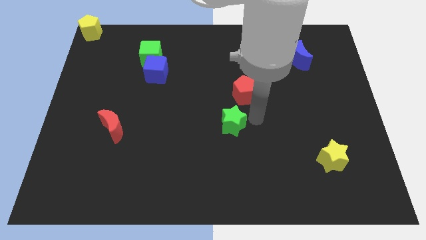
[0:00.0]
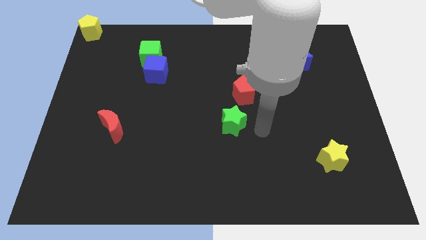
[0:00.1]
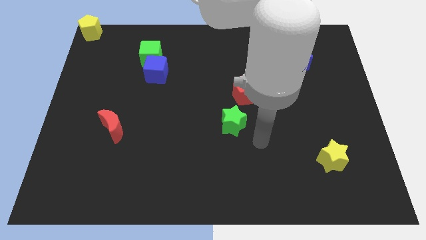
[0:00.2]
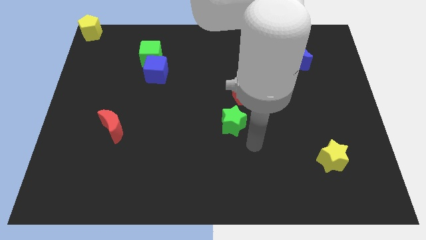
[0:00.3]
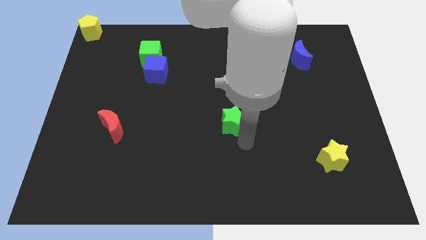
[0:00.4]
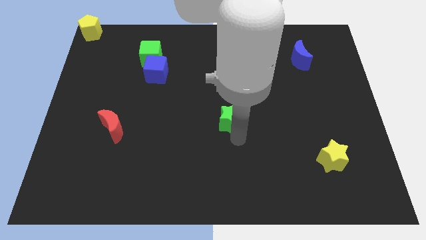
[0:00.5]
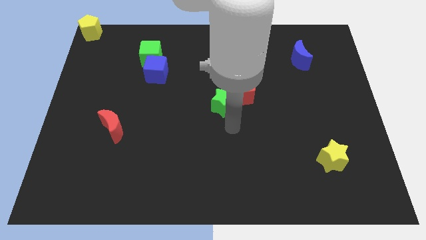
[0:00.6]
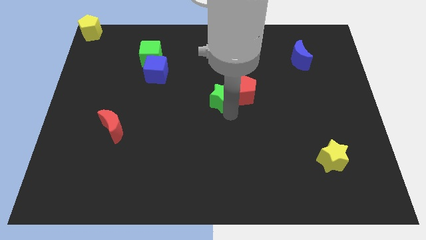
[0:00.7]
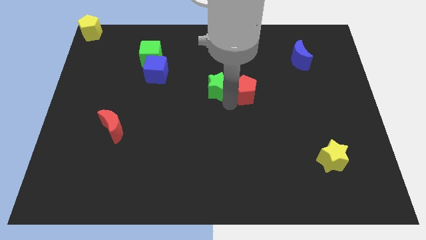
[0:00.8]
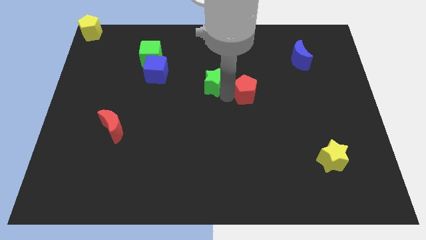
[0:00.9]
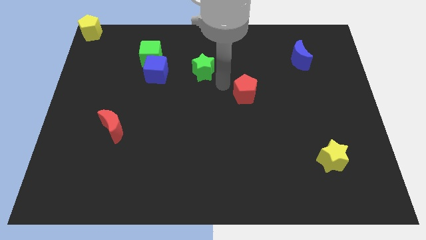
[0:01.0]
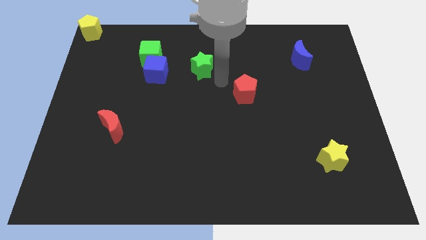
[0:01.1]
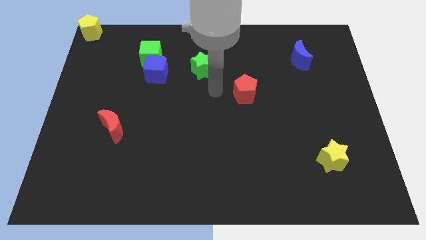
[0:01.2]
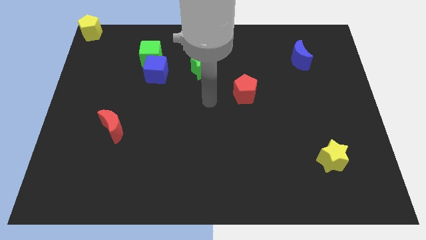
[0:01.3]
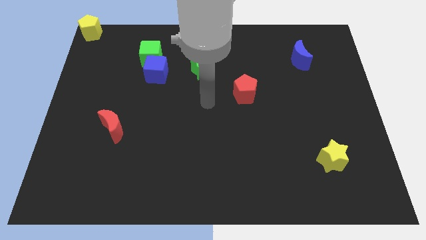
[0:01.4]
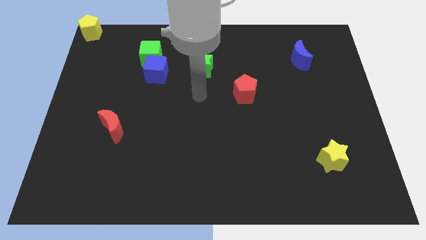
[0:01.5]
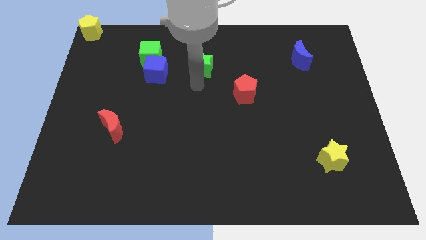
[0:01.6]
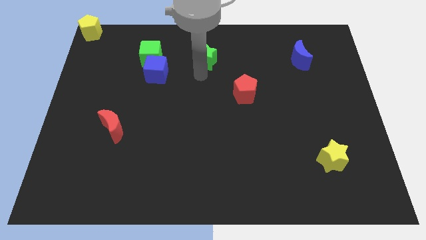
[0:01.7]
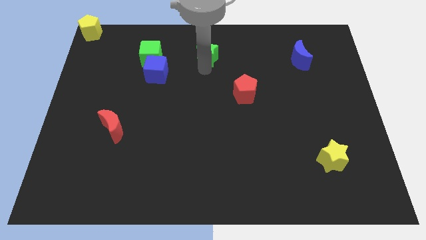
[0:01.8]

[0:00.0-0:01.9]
move the green star parallel right to the green cube

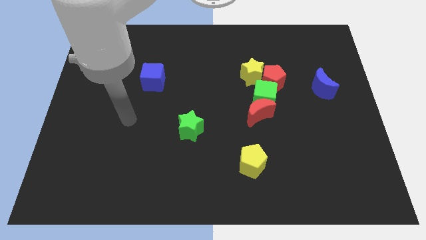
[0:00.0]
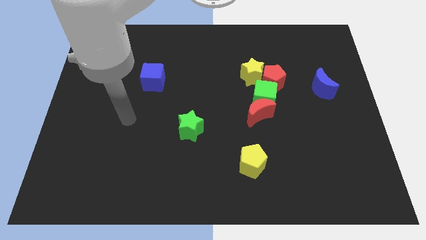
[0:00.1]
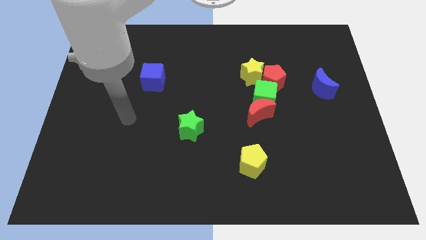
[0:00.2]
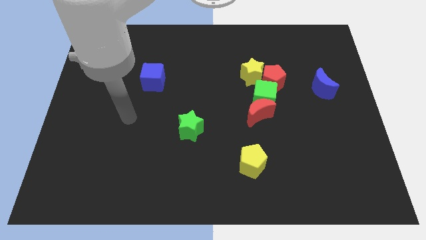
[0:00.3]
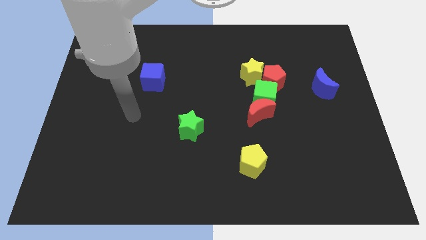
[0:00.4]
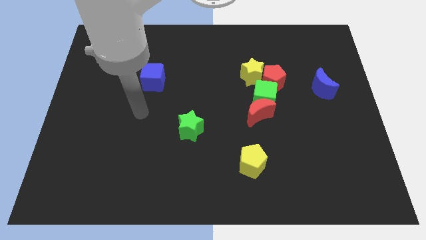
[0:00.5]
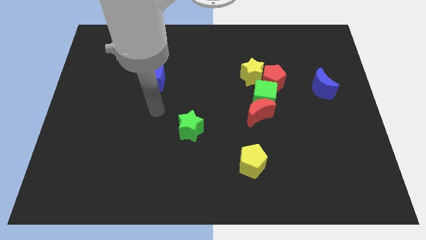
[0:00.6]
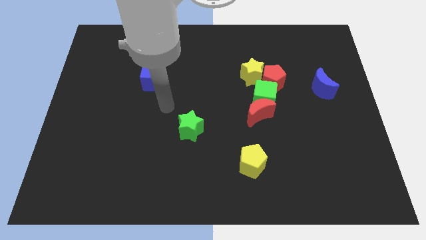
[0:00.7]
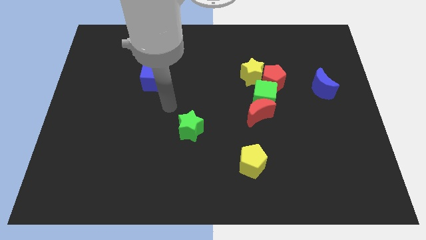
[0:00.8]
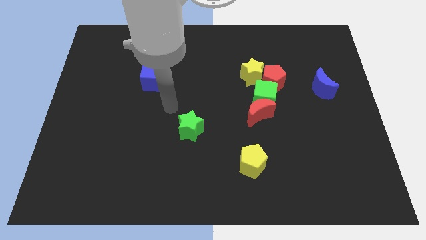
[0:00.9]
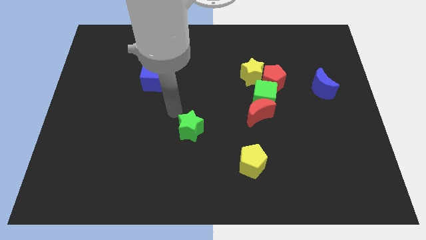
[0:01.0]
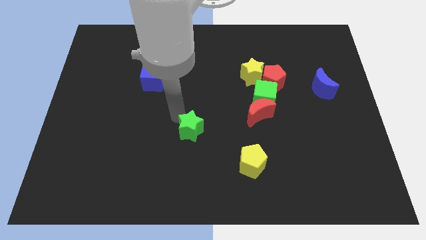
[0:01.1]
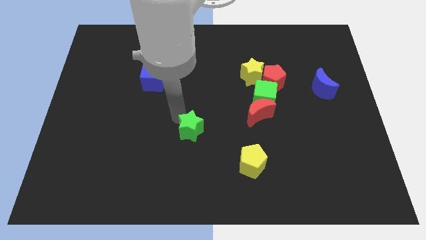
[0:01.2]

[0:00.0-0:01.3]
go near the green star

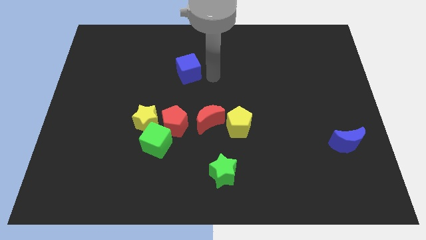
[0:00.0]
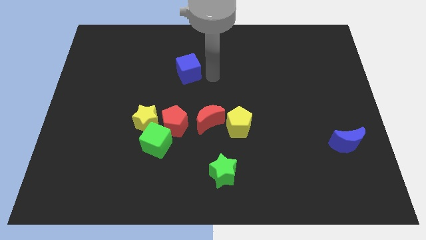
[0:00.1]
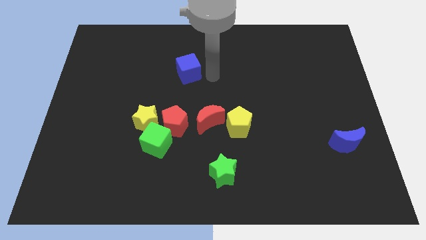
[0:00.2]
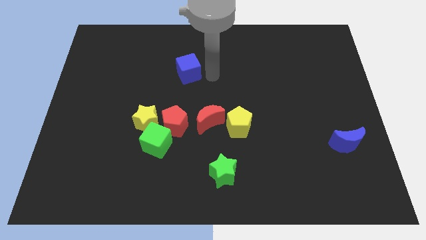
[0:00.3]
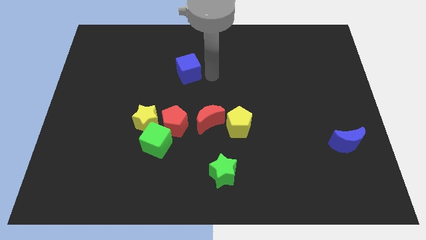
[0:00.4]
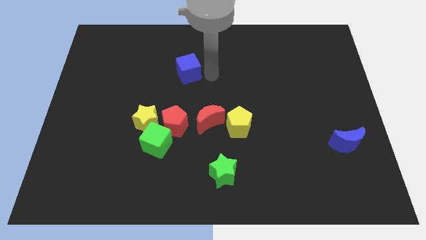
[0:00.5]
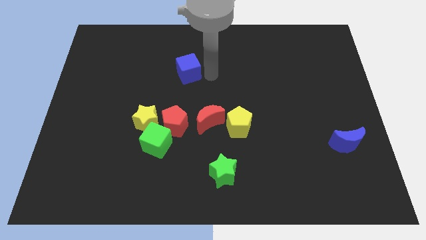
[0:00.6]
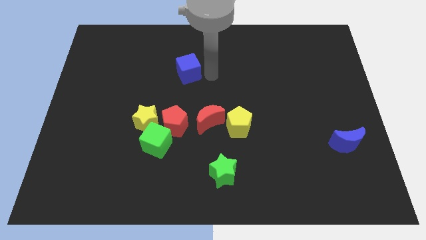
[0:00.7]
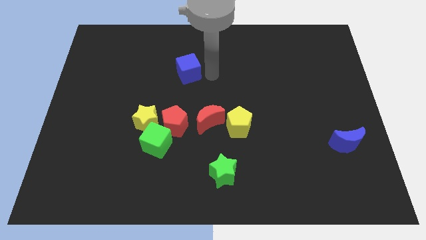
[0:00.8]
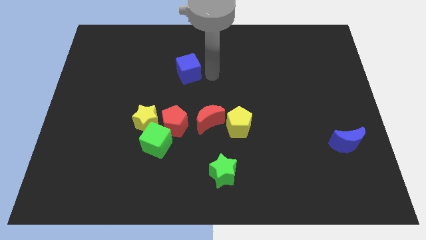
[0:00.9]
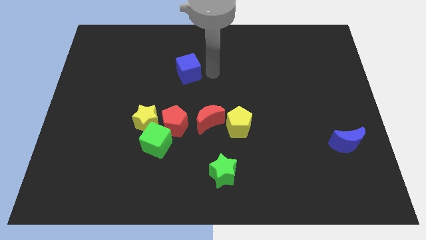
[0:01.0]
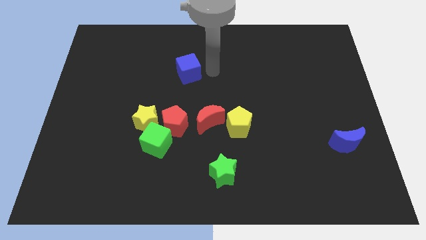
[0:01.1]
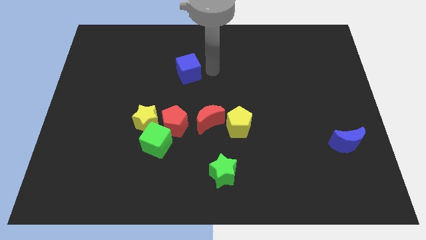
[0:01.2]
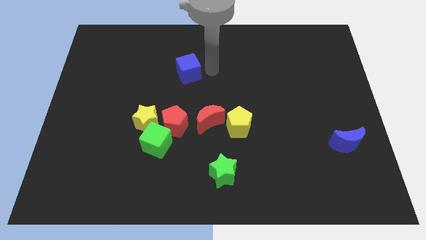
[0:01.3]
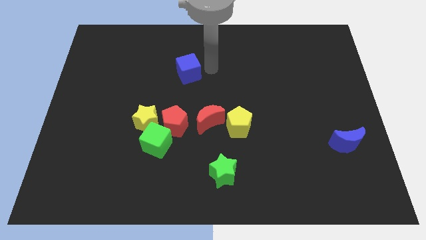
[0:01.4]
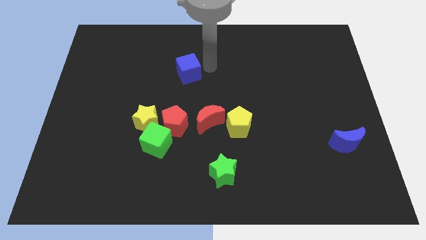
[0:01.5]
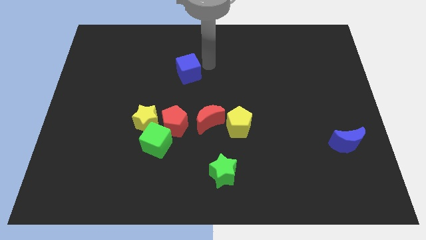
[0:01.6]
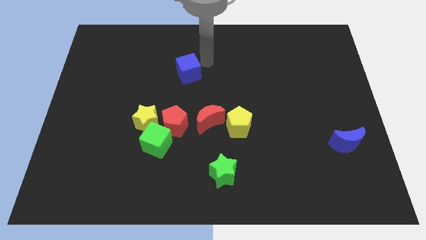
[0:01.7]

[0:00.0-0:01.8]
place arm on the right of blue cube

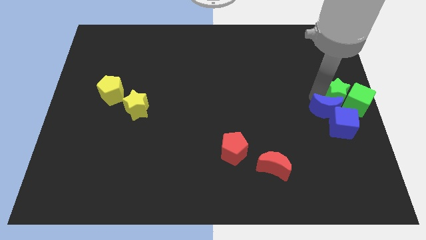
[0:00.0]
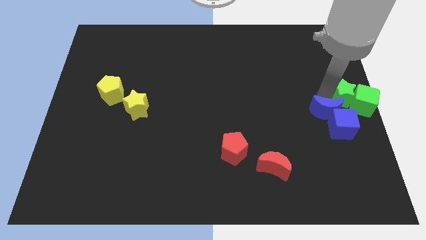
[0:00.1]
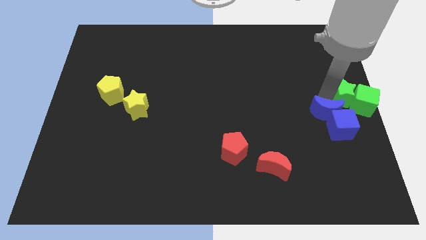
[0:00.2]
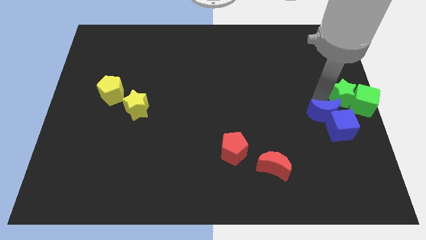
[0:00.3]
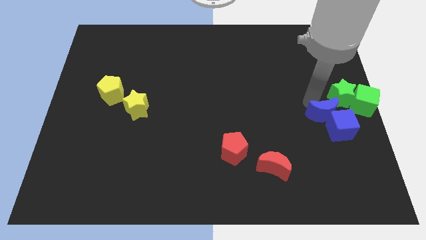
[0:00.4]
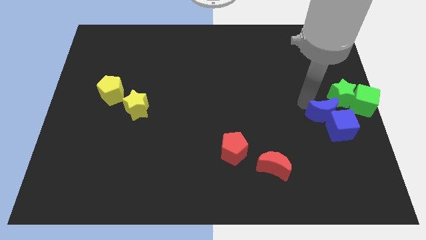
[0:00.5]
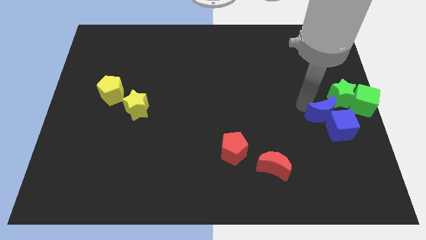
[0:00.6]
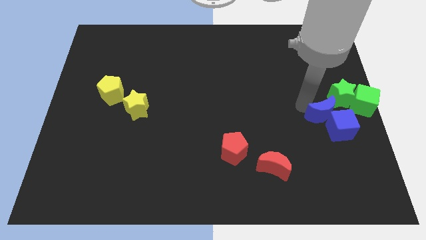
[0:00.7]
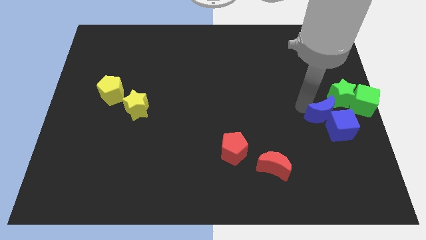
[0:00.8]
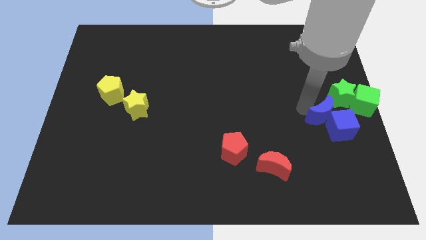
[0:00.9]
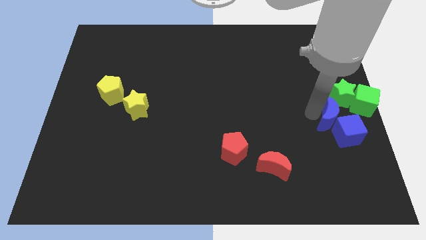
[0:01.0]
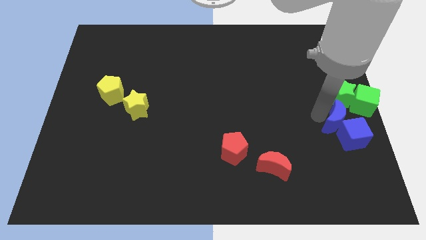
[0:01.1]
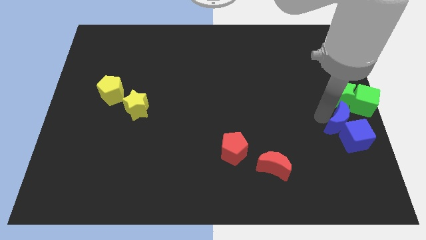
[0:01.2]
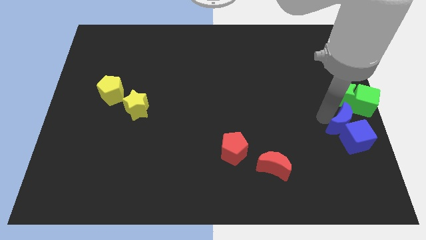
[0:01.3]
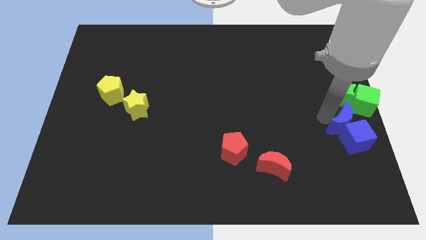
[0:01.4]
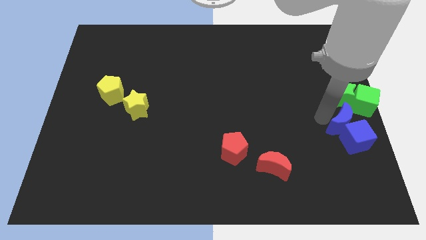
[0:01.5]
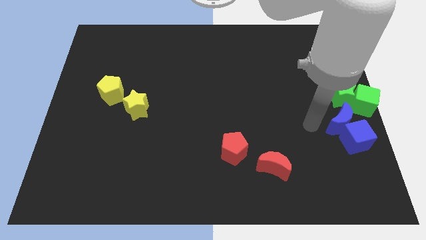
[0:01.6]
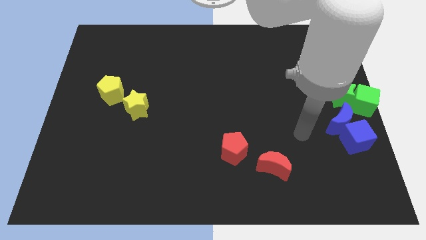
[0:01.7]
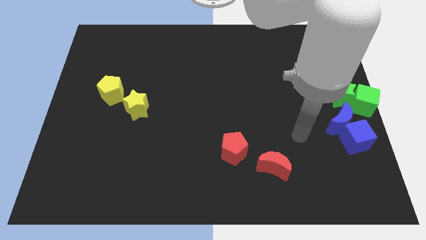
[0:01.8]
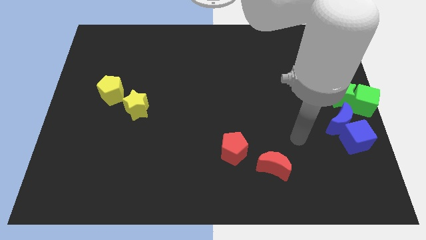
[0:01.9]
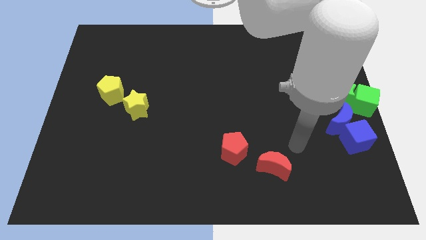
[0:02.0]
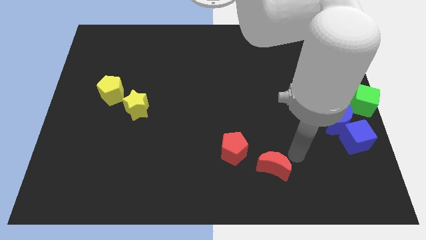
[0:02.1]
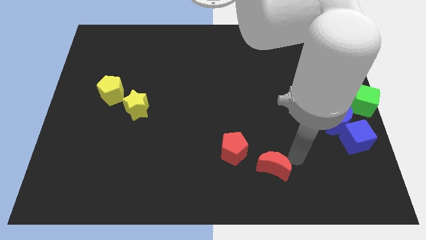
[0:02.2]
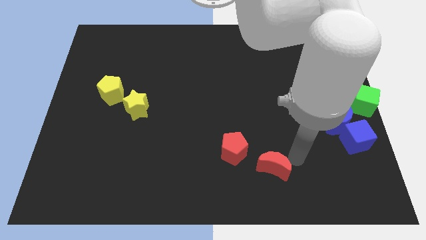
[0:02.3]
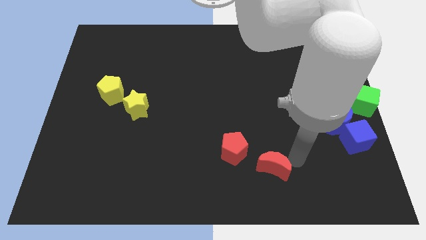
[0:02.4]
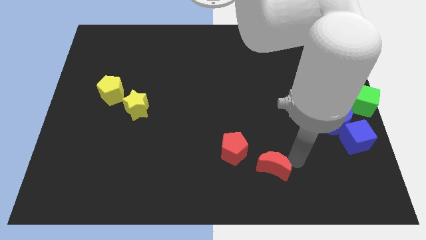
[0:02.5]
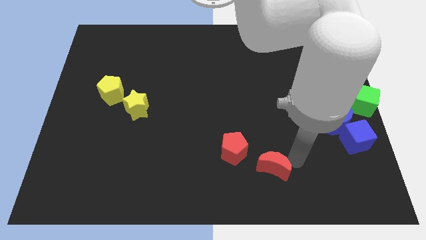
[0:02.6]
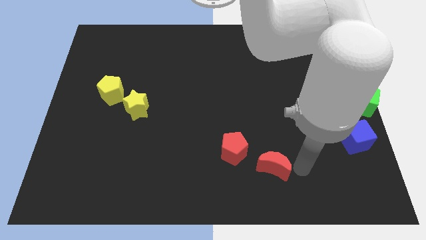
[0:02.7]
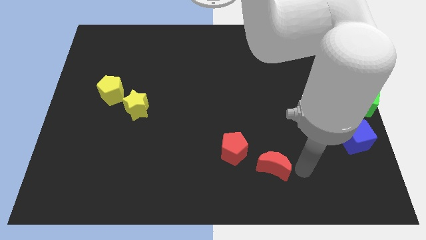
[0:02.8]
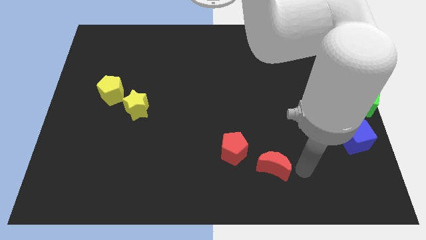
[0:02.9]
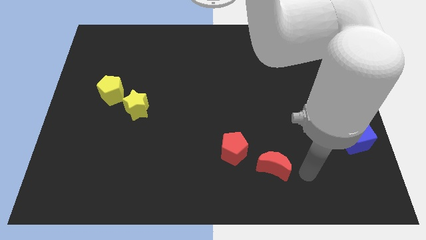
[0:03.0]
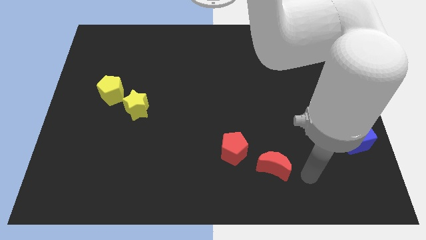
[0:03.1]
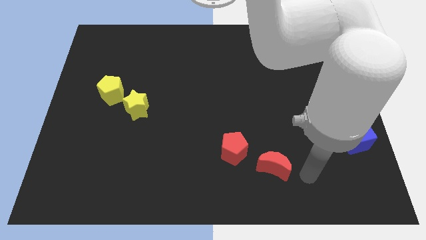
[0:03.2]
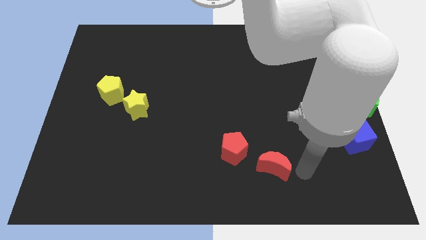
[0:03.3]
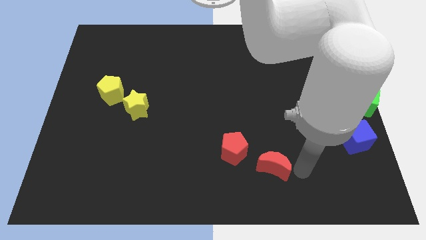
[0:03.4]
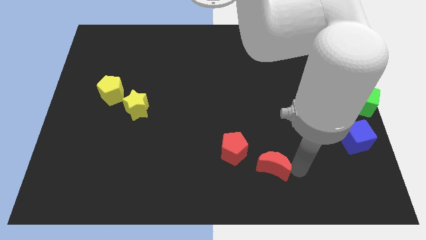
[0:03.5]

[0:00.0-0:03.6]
push the blue blocks slightly to the bottom

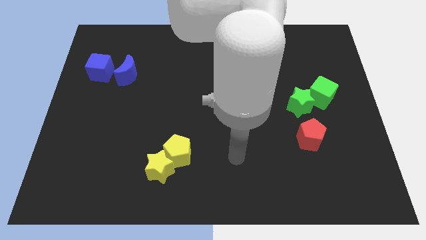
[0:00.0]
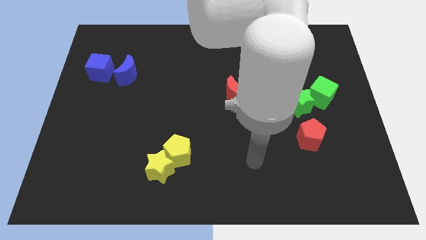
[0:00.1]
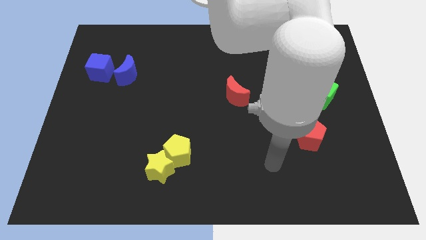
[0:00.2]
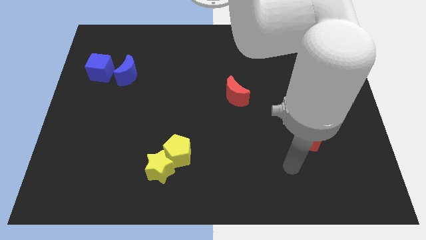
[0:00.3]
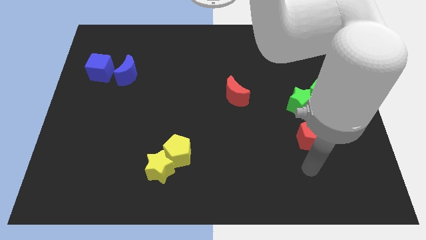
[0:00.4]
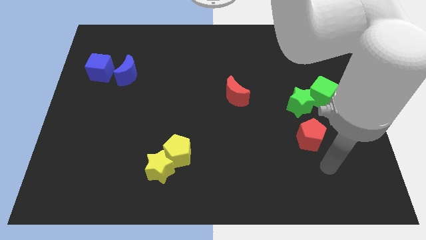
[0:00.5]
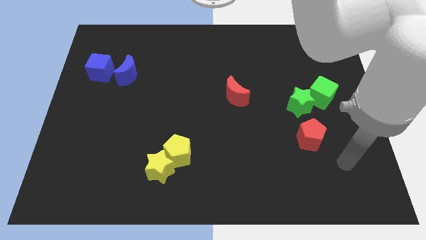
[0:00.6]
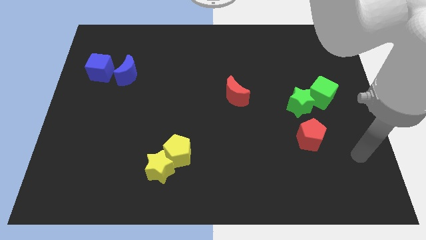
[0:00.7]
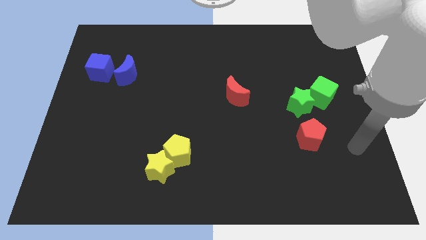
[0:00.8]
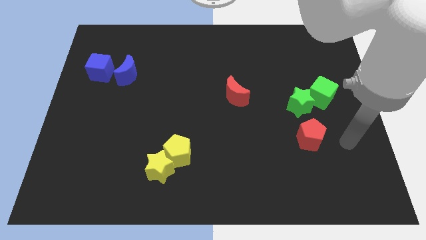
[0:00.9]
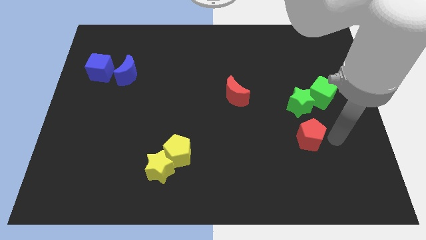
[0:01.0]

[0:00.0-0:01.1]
move your arm to the right of red pentagon
